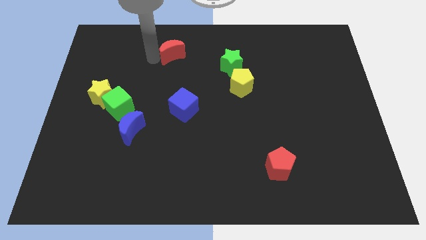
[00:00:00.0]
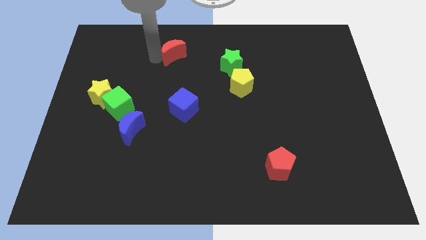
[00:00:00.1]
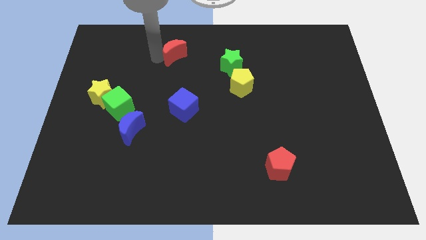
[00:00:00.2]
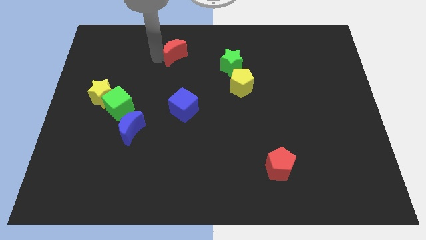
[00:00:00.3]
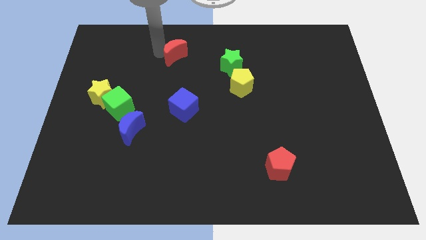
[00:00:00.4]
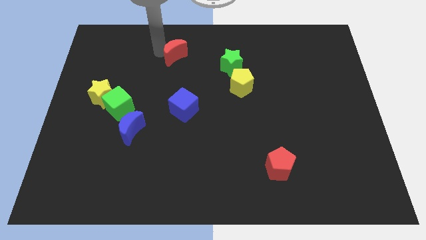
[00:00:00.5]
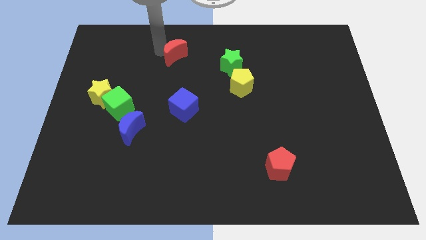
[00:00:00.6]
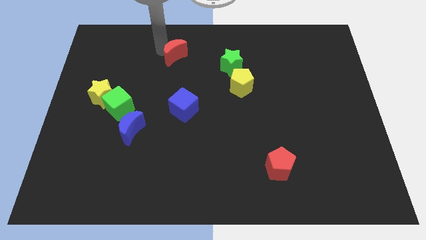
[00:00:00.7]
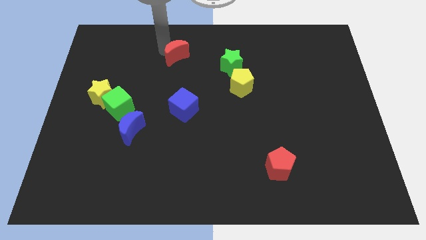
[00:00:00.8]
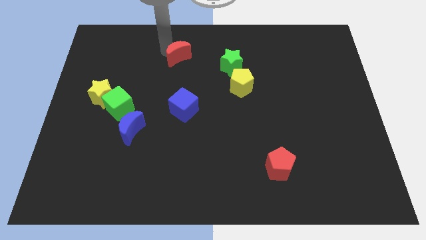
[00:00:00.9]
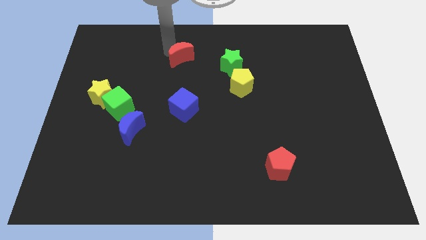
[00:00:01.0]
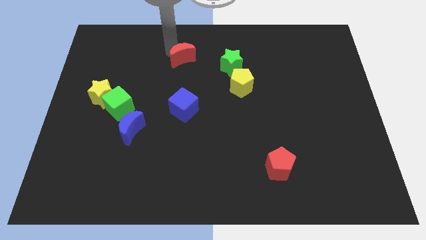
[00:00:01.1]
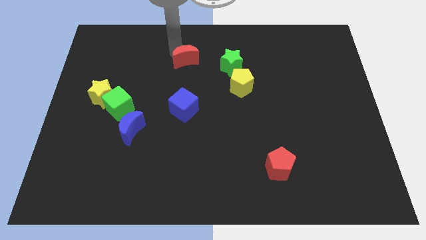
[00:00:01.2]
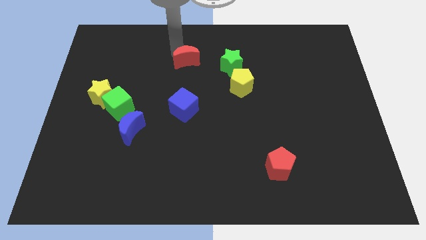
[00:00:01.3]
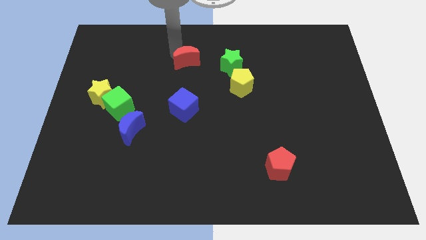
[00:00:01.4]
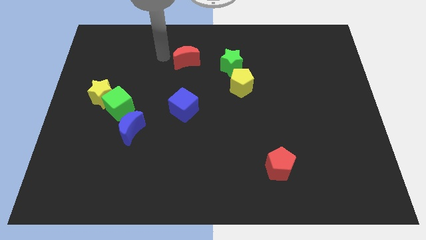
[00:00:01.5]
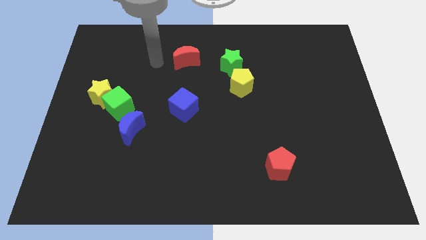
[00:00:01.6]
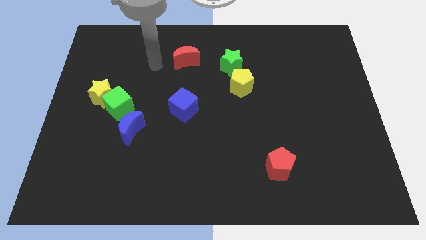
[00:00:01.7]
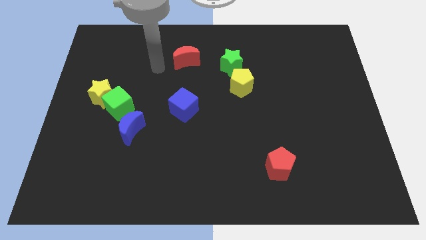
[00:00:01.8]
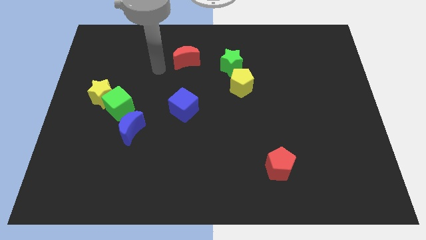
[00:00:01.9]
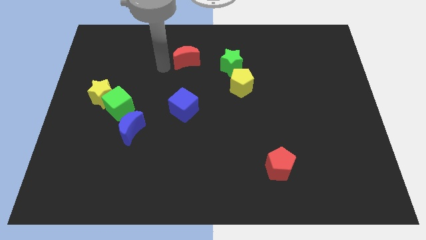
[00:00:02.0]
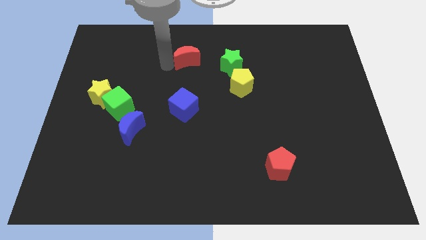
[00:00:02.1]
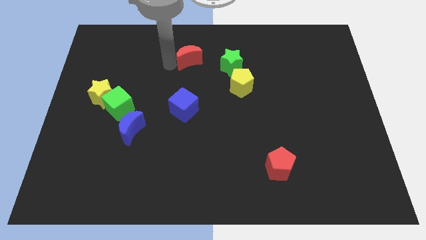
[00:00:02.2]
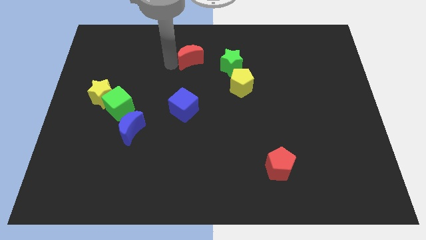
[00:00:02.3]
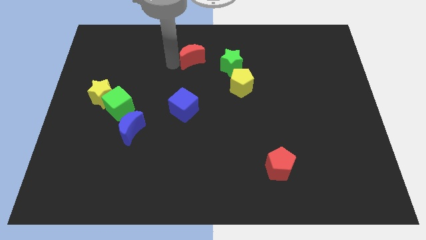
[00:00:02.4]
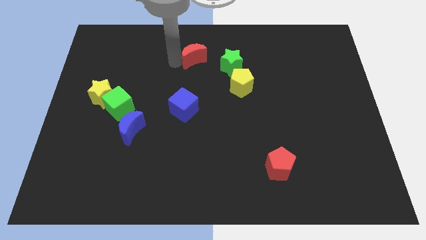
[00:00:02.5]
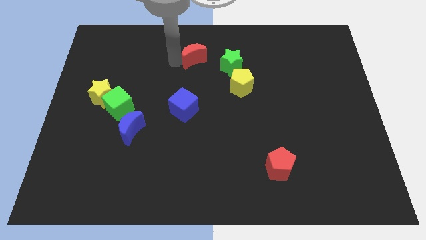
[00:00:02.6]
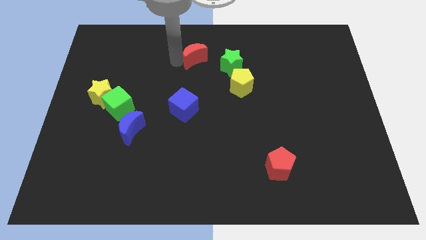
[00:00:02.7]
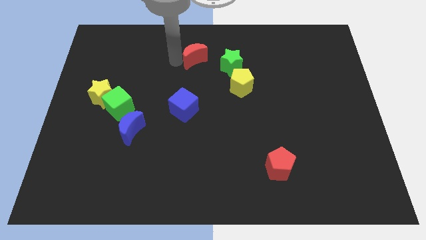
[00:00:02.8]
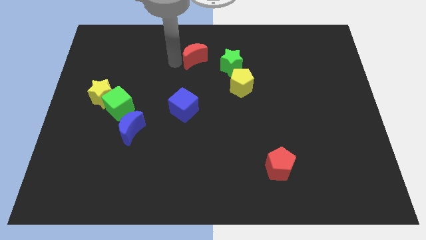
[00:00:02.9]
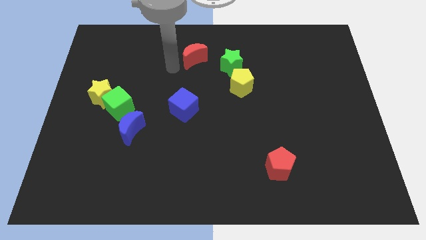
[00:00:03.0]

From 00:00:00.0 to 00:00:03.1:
move the red moon to the left side of the green star

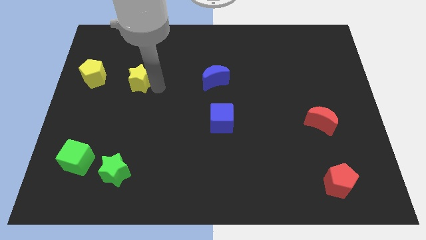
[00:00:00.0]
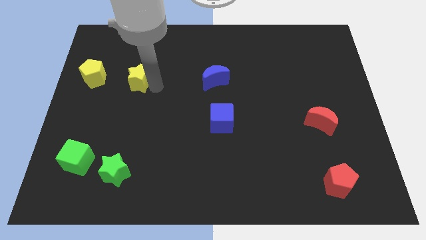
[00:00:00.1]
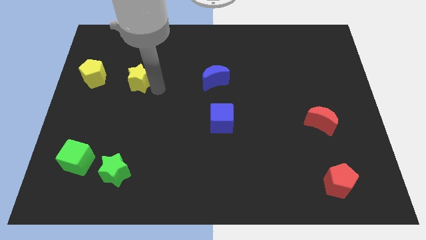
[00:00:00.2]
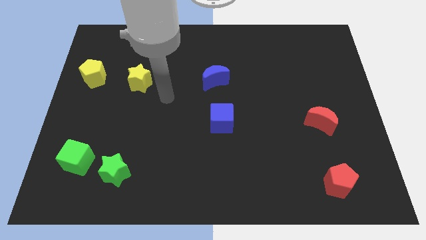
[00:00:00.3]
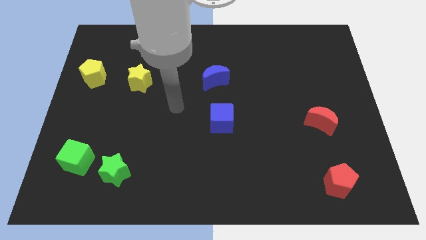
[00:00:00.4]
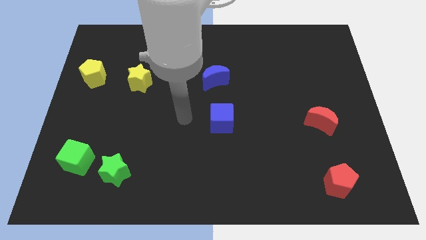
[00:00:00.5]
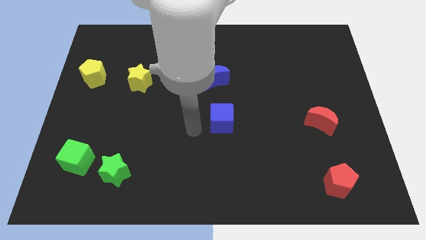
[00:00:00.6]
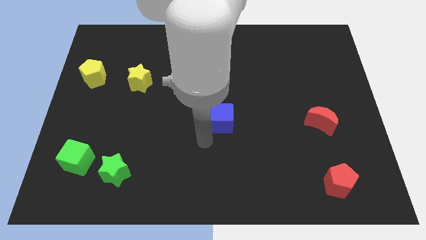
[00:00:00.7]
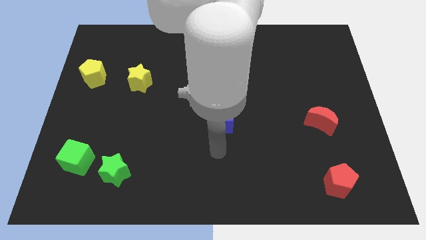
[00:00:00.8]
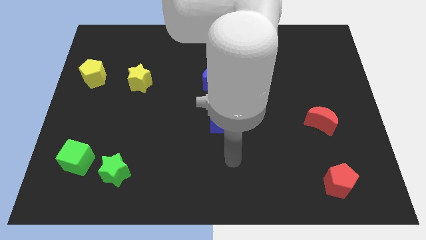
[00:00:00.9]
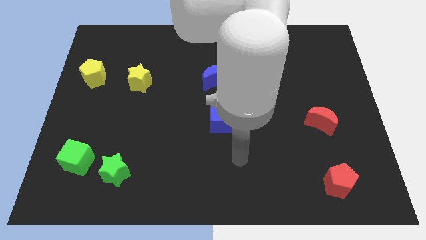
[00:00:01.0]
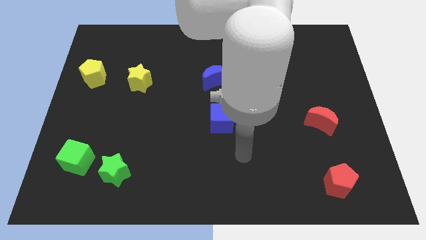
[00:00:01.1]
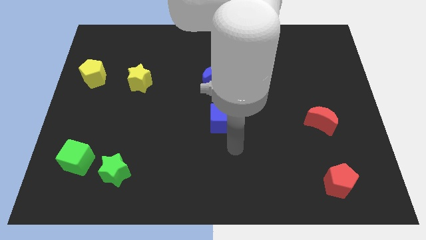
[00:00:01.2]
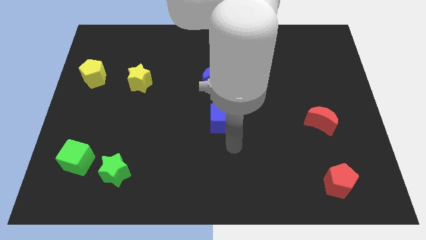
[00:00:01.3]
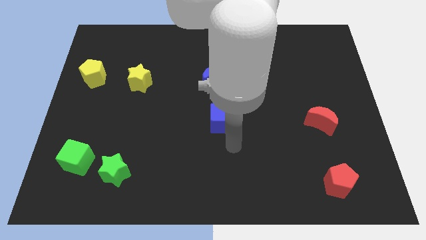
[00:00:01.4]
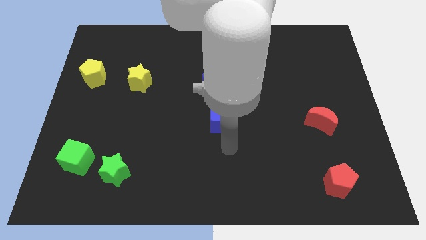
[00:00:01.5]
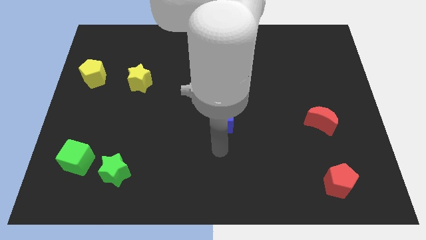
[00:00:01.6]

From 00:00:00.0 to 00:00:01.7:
place your arm below the blue cube

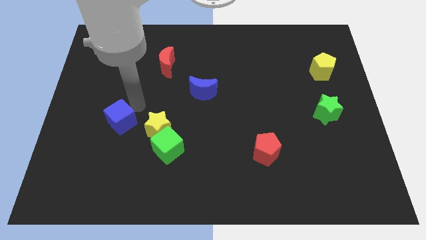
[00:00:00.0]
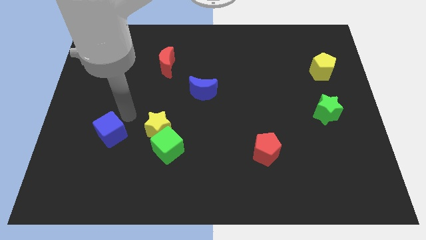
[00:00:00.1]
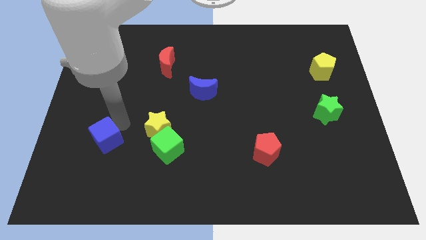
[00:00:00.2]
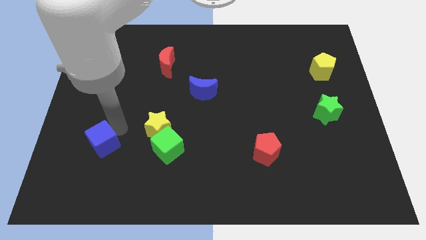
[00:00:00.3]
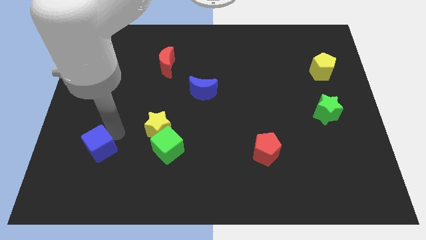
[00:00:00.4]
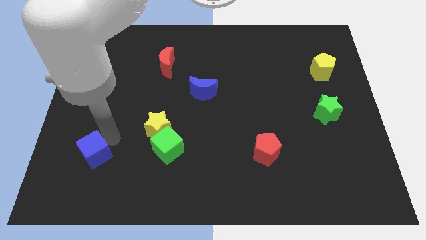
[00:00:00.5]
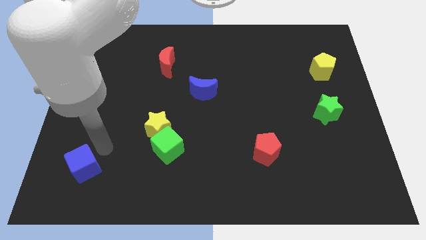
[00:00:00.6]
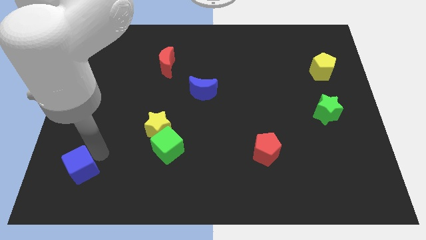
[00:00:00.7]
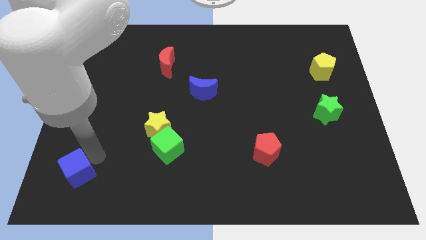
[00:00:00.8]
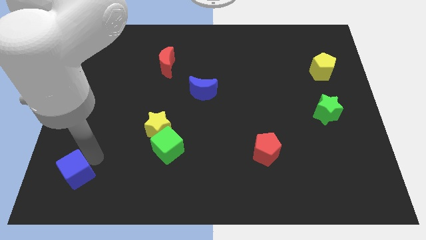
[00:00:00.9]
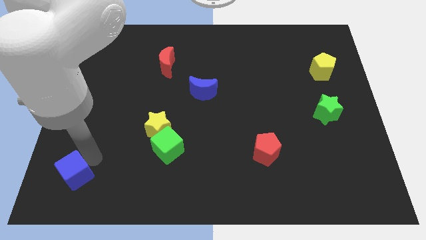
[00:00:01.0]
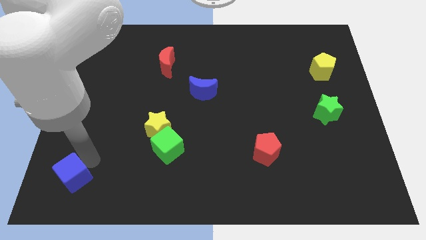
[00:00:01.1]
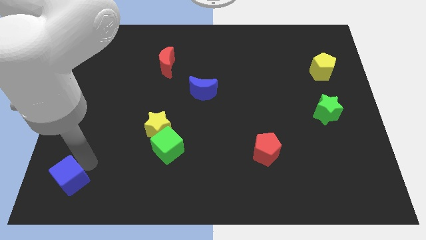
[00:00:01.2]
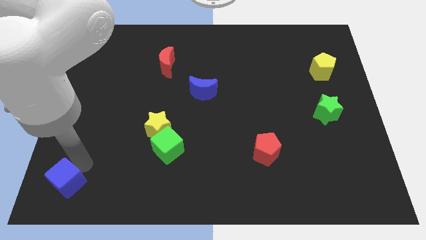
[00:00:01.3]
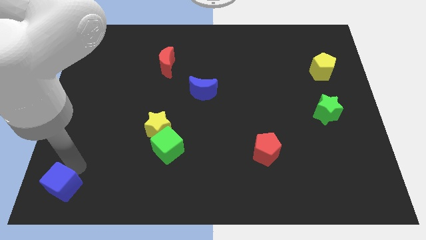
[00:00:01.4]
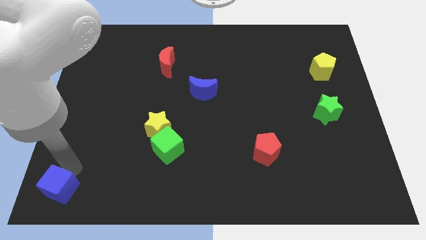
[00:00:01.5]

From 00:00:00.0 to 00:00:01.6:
move blue cube to the left bottom of the board

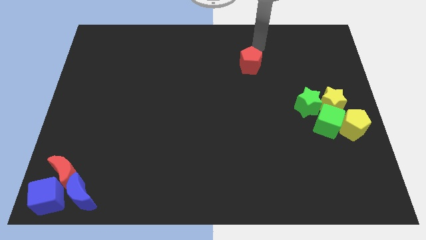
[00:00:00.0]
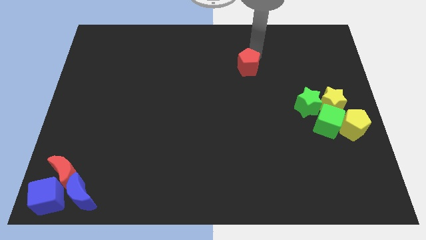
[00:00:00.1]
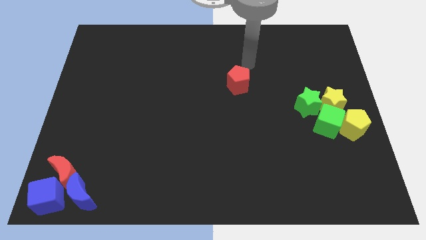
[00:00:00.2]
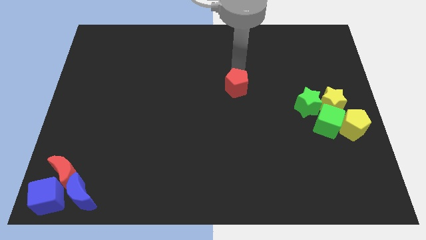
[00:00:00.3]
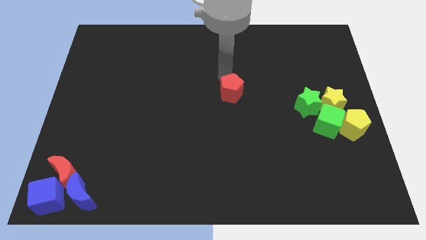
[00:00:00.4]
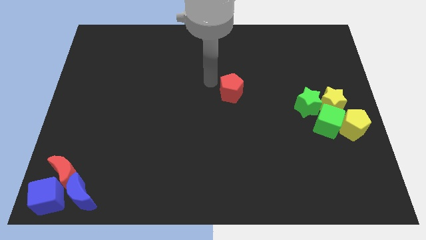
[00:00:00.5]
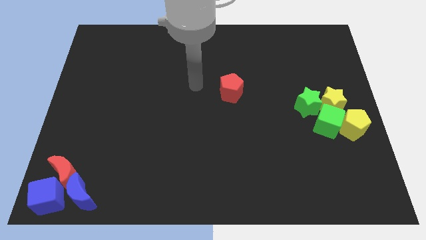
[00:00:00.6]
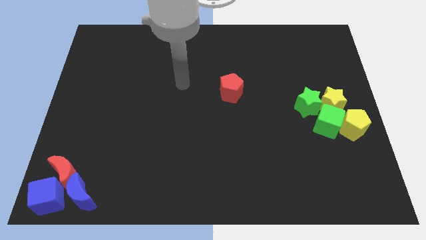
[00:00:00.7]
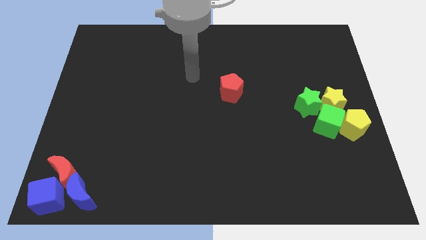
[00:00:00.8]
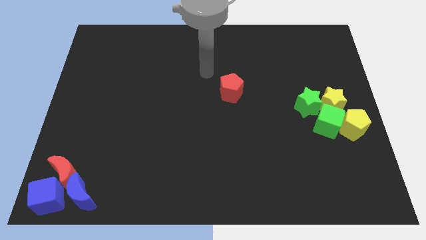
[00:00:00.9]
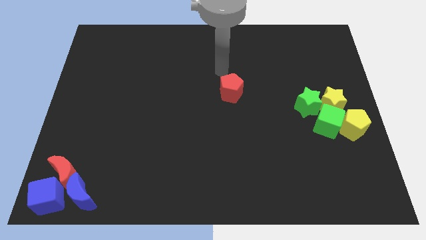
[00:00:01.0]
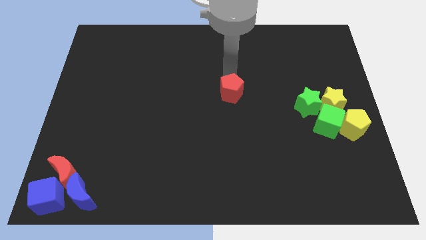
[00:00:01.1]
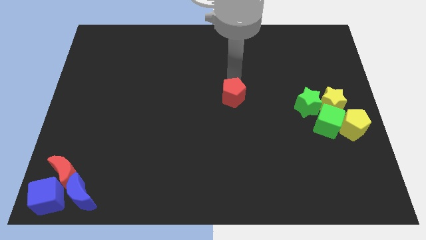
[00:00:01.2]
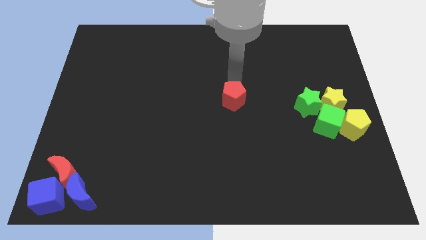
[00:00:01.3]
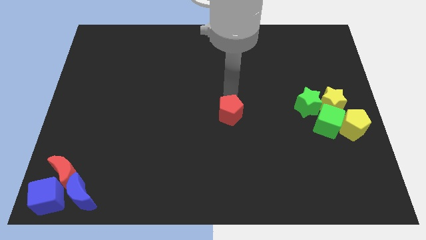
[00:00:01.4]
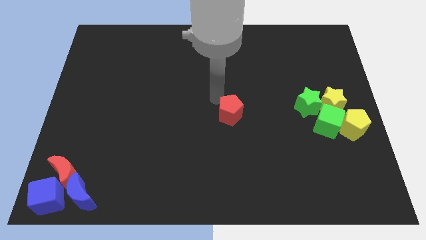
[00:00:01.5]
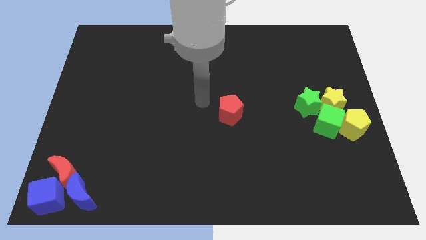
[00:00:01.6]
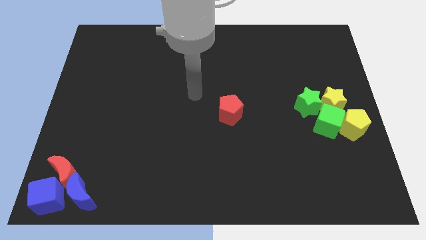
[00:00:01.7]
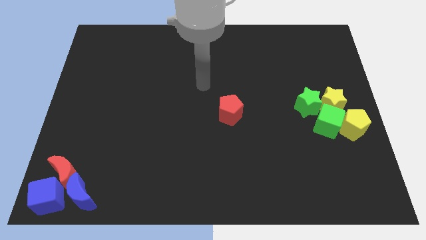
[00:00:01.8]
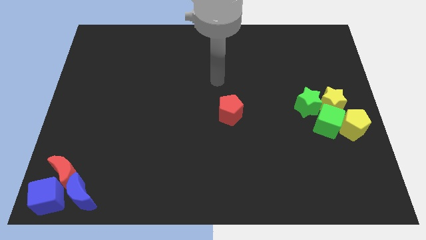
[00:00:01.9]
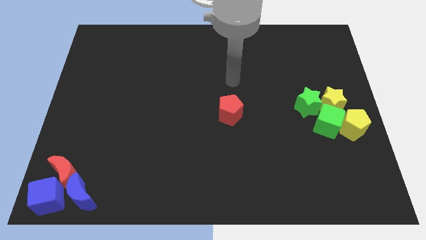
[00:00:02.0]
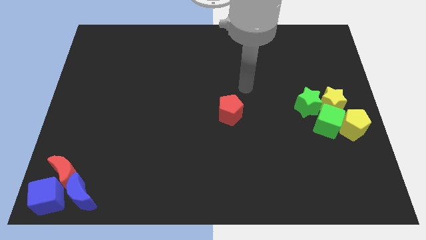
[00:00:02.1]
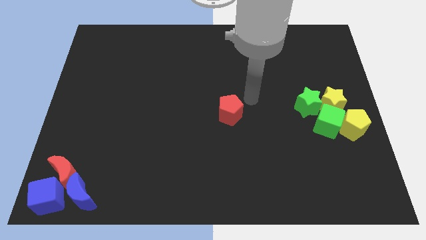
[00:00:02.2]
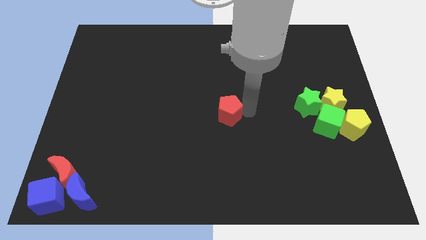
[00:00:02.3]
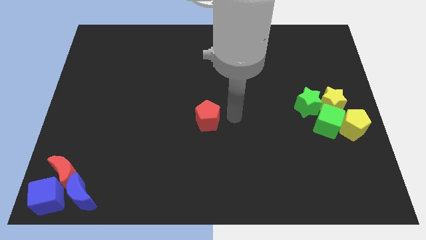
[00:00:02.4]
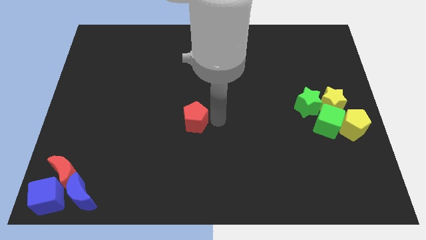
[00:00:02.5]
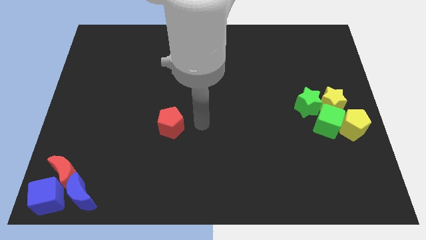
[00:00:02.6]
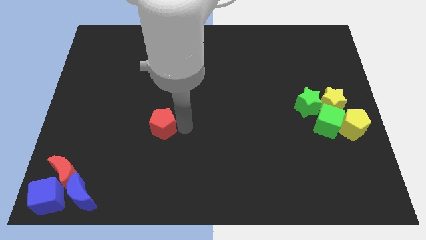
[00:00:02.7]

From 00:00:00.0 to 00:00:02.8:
drag the red pentagon slightly downwards
